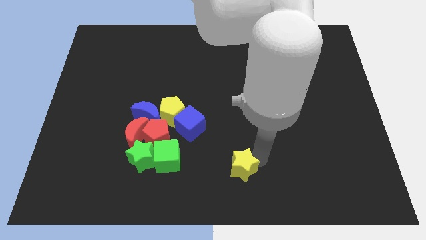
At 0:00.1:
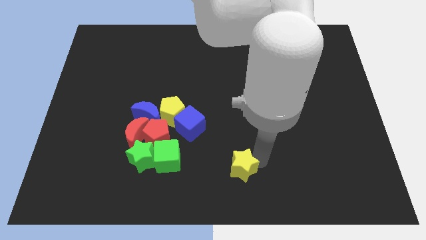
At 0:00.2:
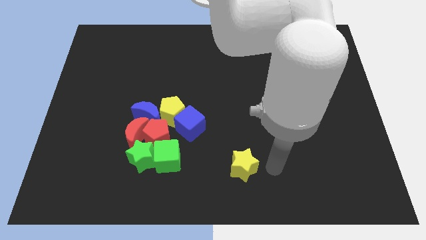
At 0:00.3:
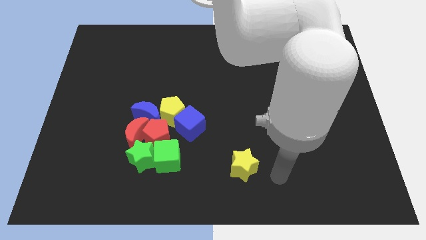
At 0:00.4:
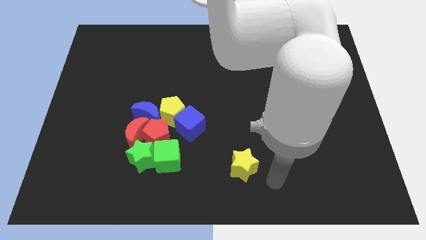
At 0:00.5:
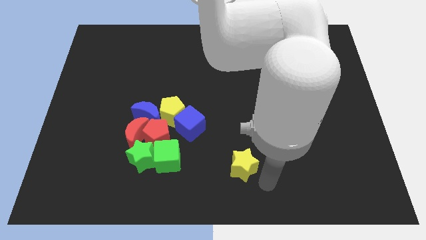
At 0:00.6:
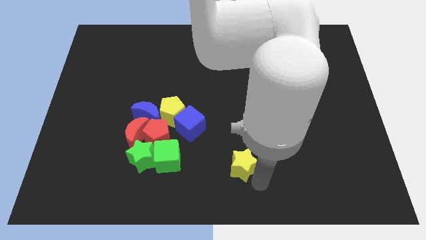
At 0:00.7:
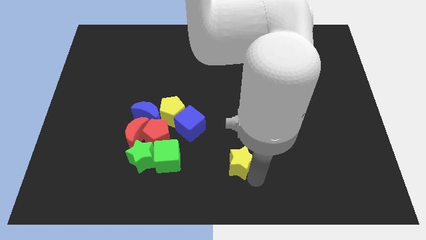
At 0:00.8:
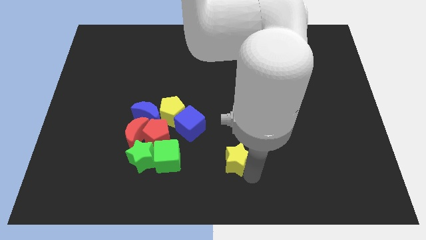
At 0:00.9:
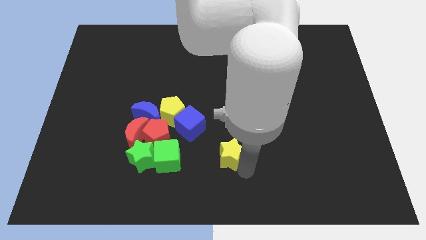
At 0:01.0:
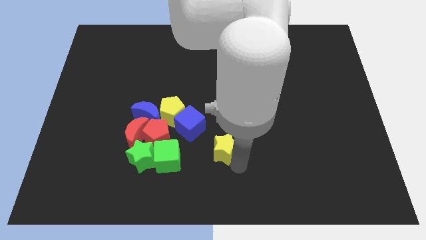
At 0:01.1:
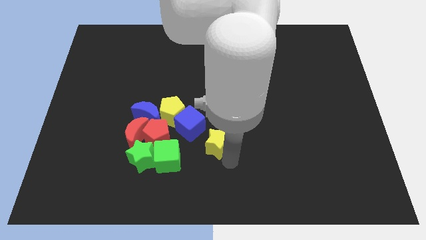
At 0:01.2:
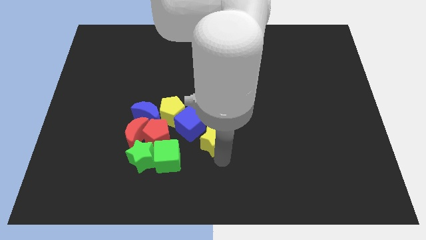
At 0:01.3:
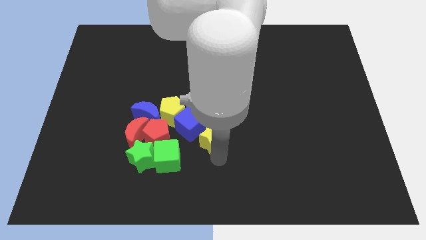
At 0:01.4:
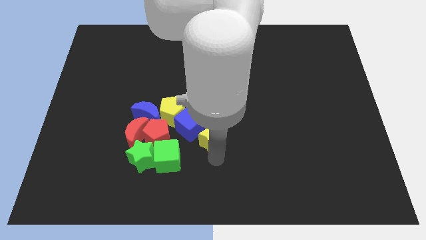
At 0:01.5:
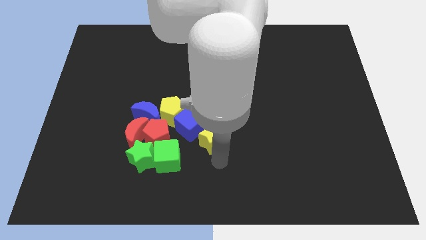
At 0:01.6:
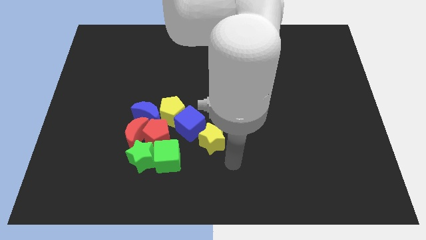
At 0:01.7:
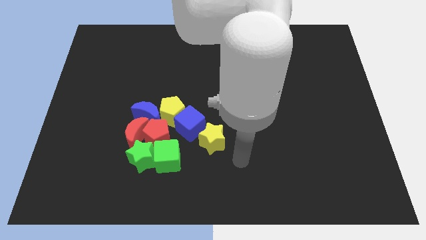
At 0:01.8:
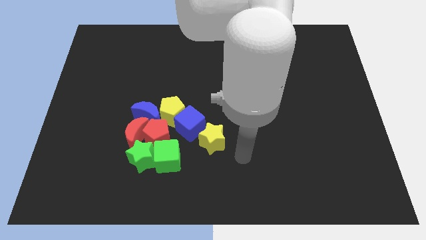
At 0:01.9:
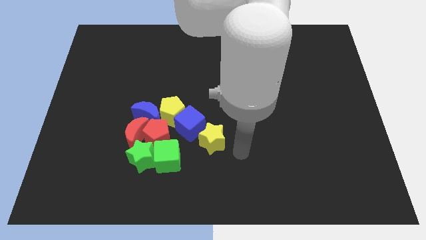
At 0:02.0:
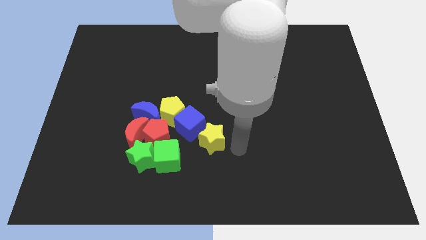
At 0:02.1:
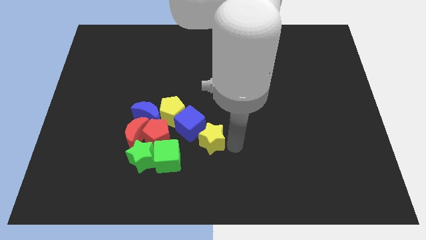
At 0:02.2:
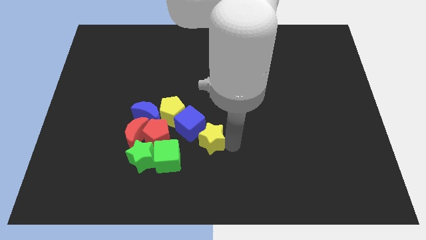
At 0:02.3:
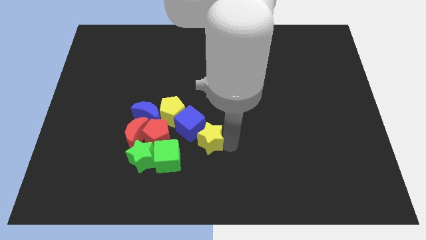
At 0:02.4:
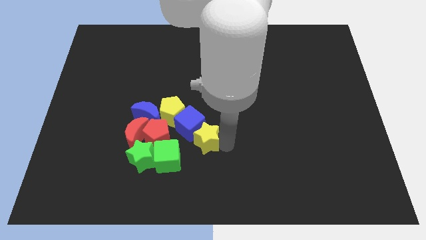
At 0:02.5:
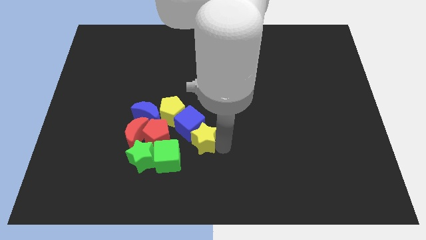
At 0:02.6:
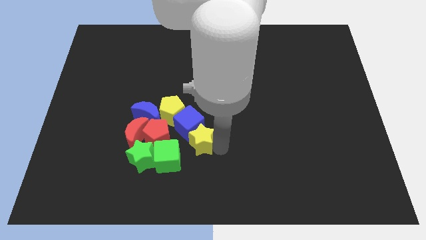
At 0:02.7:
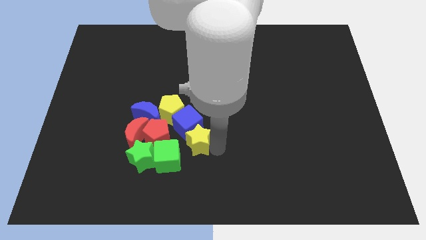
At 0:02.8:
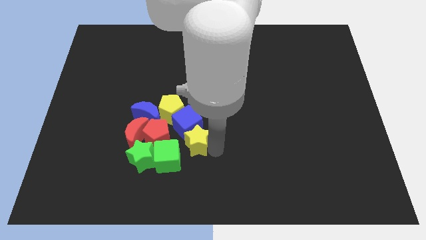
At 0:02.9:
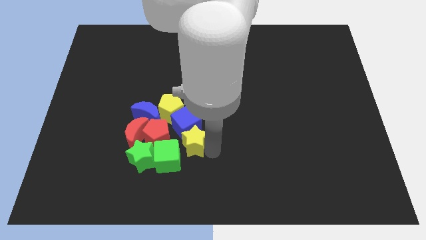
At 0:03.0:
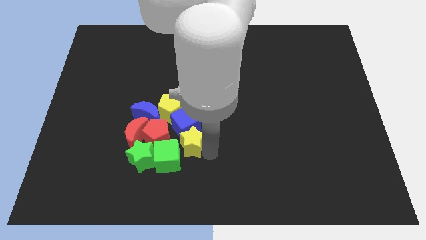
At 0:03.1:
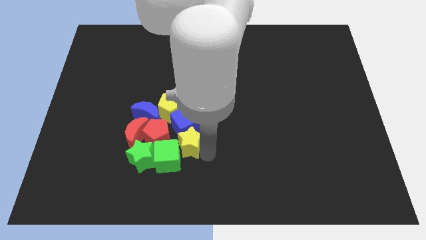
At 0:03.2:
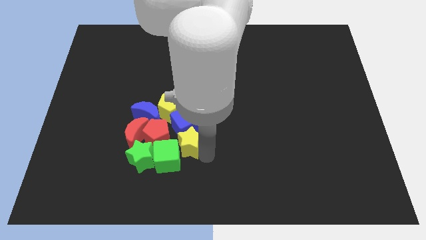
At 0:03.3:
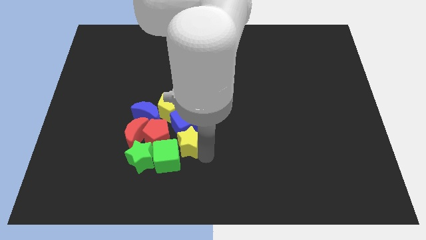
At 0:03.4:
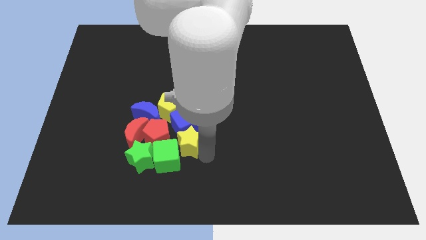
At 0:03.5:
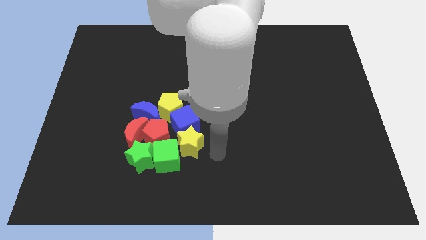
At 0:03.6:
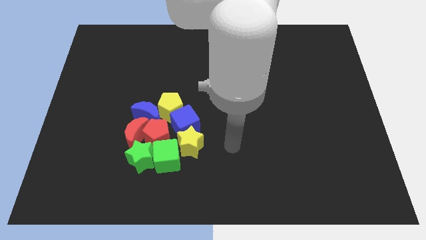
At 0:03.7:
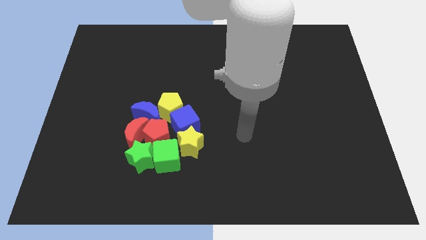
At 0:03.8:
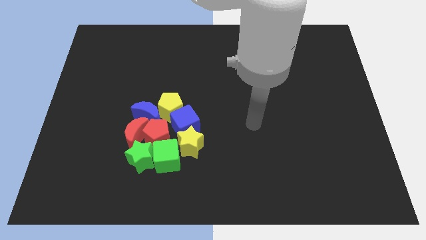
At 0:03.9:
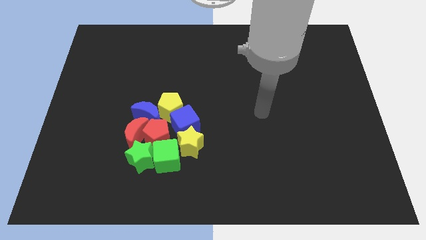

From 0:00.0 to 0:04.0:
push the yellow star to the bottom of the blue cube

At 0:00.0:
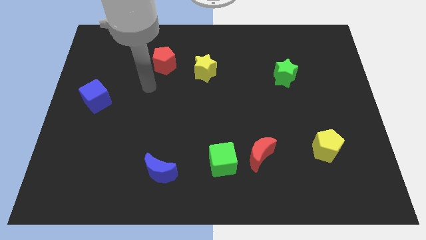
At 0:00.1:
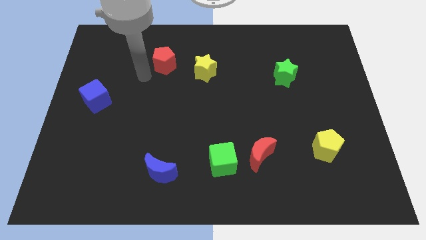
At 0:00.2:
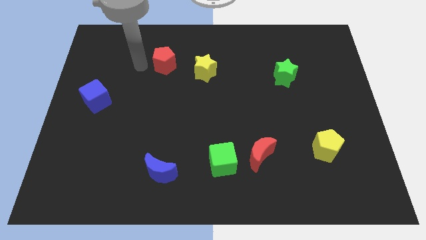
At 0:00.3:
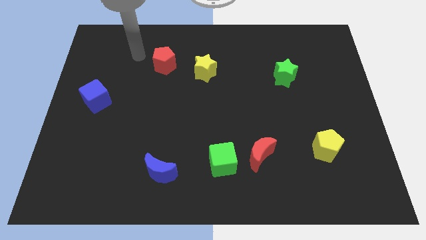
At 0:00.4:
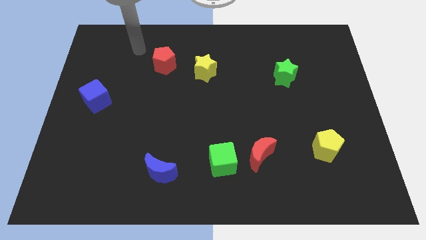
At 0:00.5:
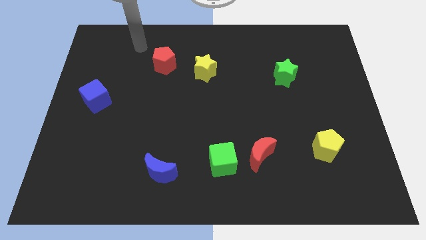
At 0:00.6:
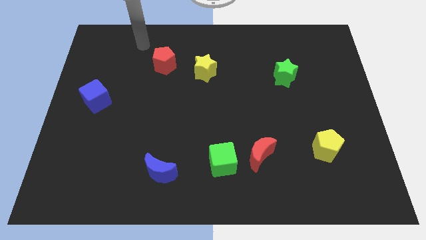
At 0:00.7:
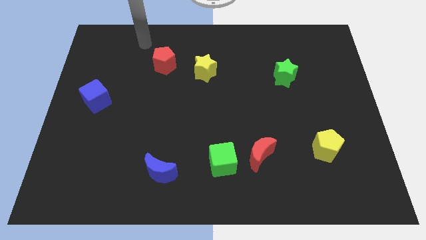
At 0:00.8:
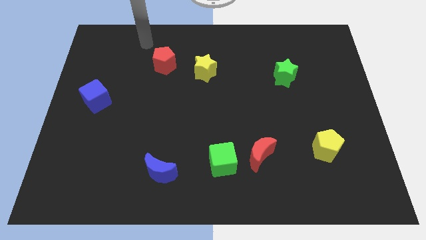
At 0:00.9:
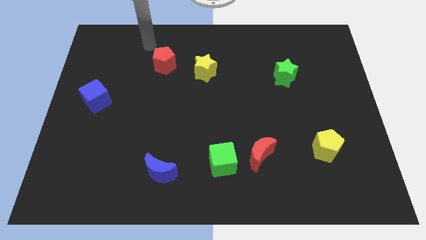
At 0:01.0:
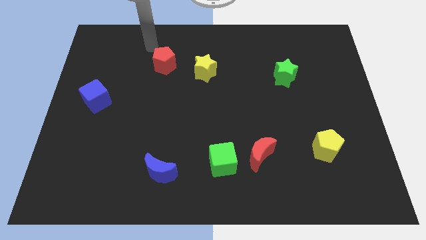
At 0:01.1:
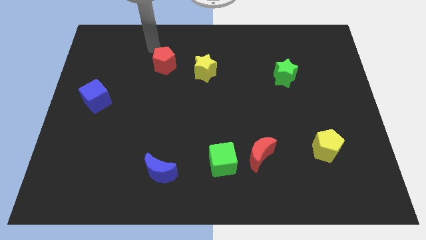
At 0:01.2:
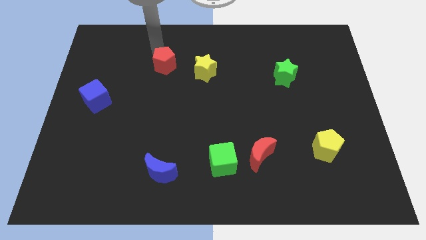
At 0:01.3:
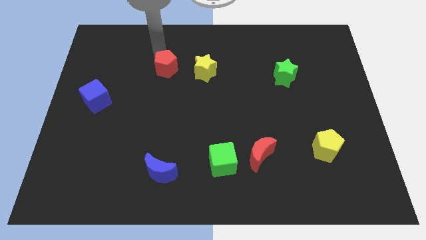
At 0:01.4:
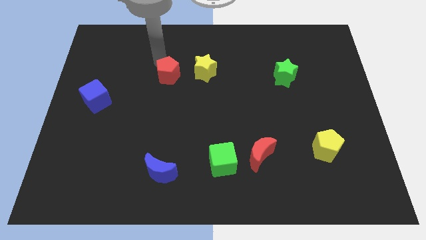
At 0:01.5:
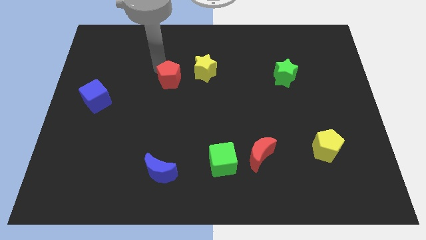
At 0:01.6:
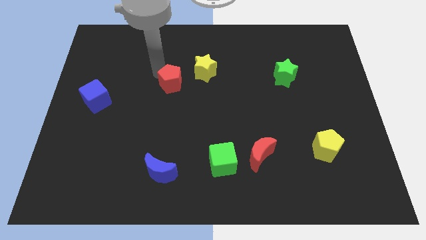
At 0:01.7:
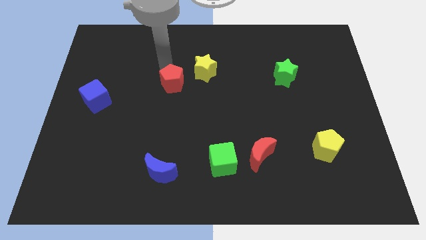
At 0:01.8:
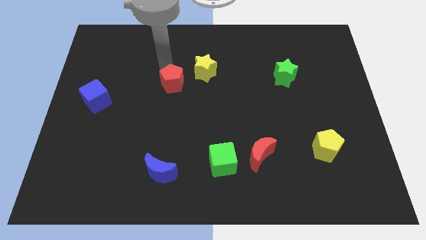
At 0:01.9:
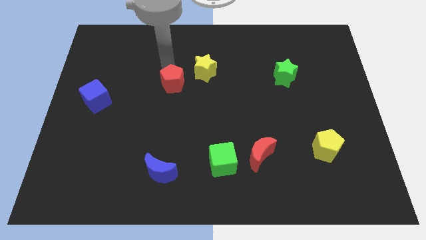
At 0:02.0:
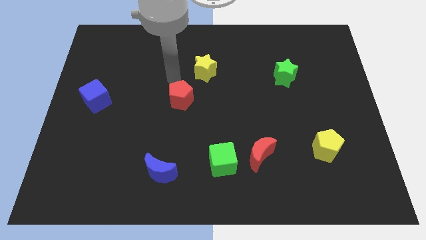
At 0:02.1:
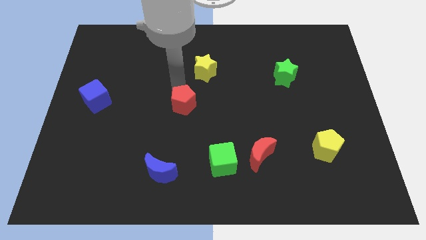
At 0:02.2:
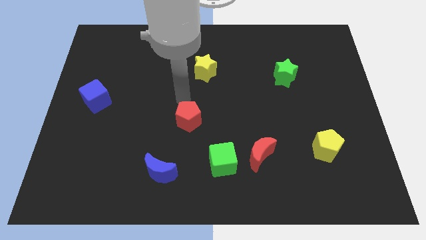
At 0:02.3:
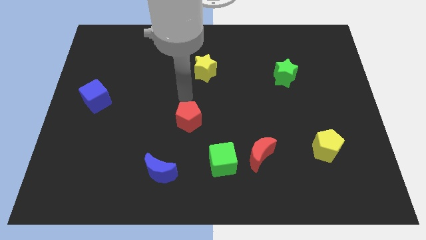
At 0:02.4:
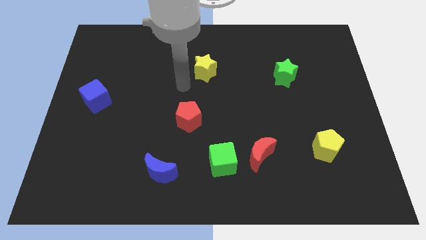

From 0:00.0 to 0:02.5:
place the red pentagon diagonally to the green cube

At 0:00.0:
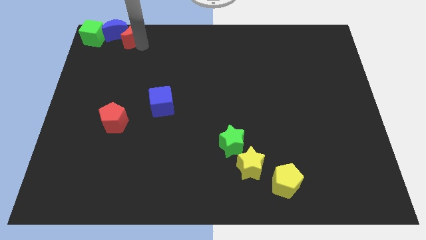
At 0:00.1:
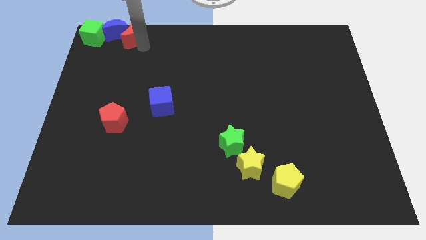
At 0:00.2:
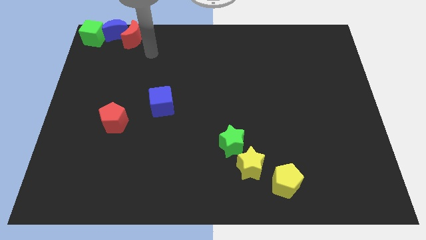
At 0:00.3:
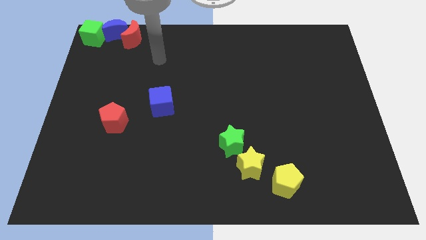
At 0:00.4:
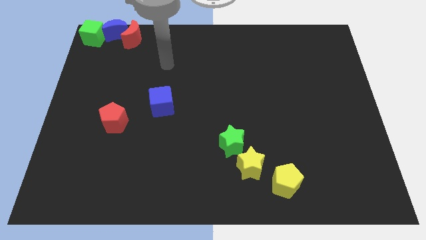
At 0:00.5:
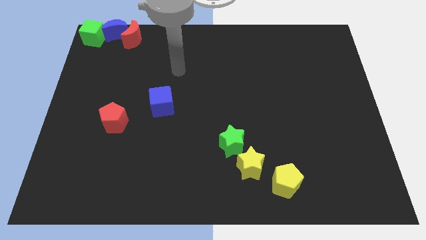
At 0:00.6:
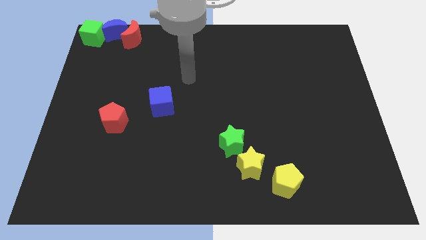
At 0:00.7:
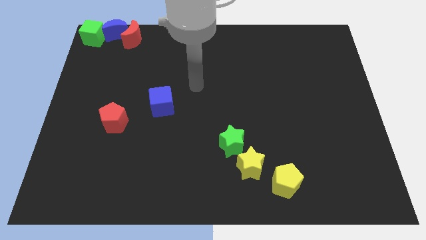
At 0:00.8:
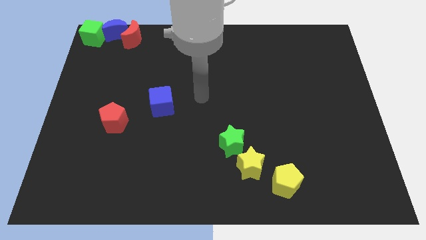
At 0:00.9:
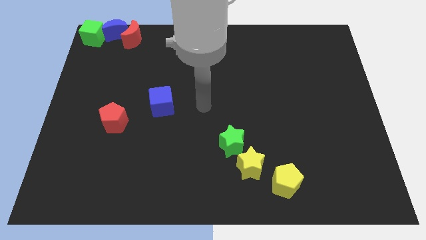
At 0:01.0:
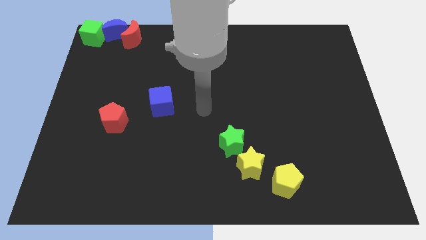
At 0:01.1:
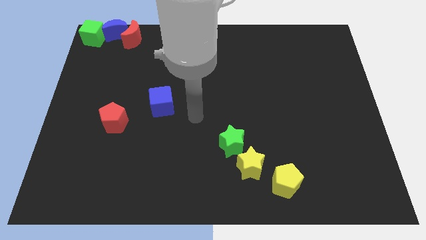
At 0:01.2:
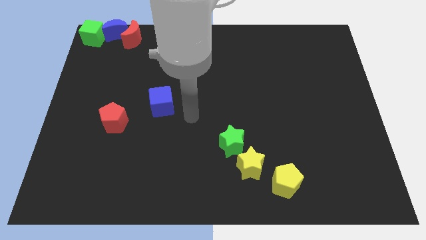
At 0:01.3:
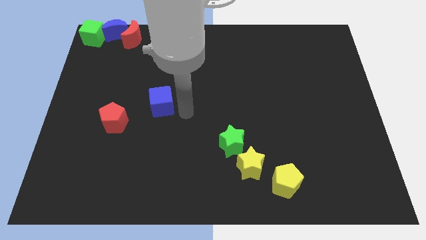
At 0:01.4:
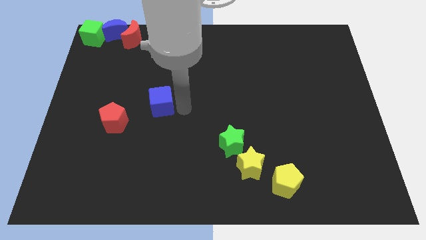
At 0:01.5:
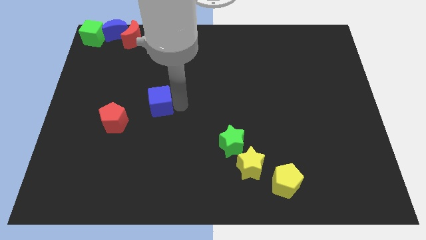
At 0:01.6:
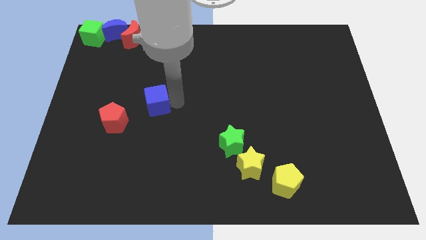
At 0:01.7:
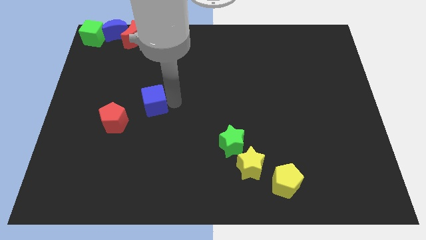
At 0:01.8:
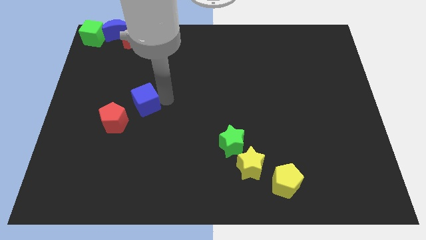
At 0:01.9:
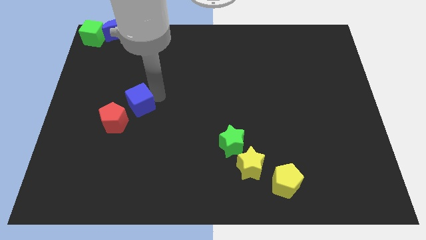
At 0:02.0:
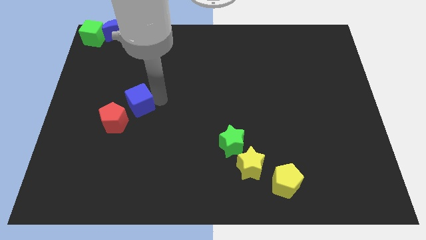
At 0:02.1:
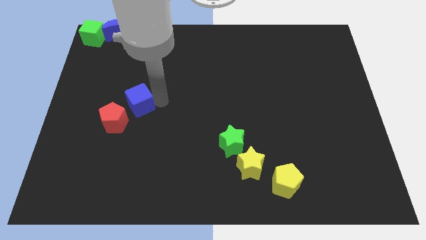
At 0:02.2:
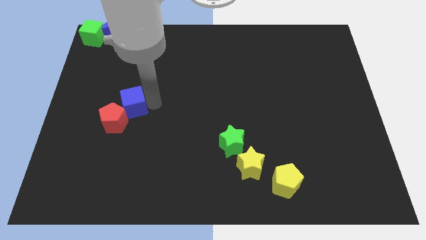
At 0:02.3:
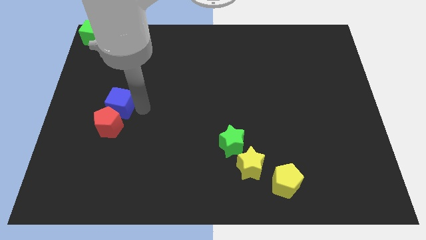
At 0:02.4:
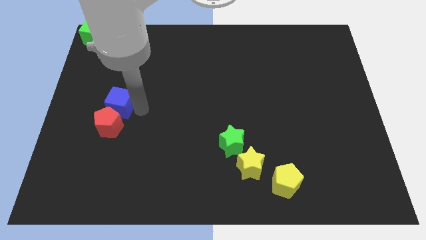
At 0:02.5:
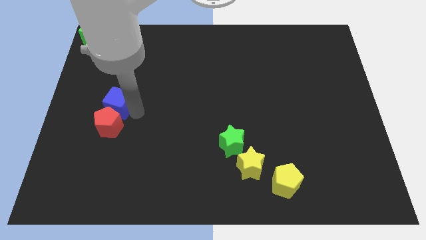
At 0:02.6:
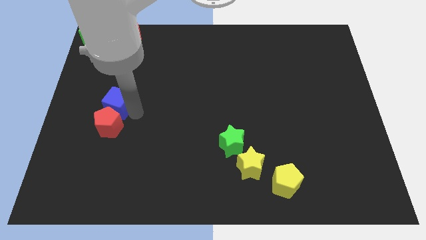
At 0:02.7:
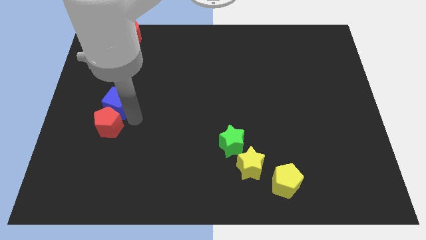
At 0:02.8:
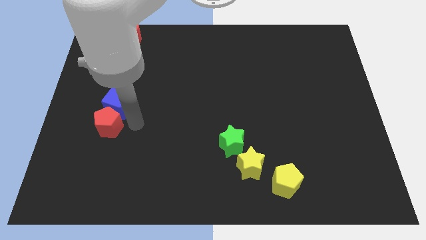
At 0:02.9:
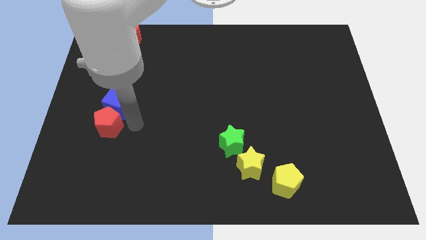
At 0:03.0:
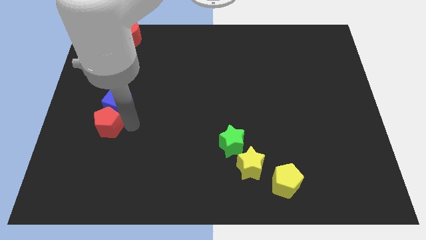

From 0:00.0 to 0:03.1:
push the blue cube at the top side of the red pentagon
